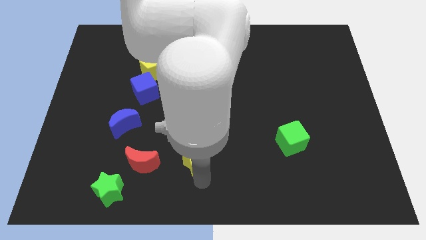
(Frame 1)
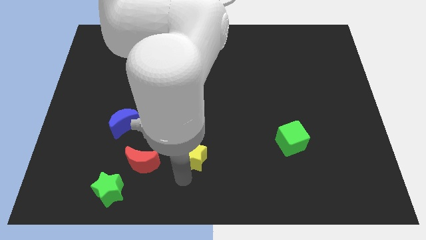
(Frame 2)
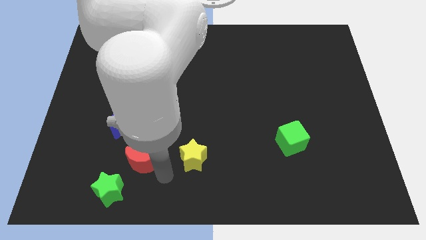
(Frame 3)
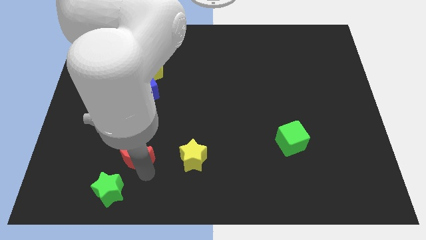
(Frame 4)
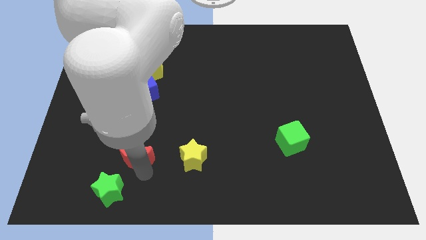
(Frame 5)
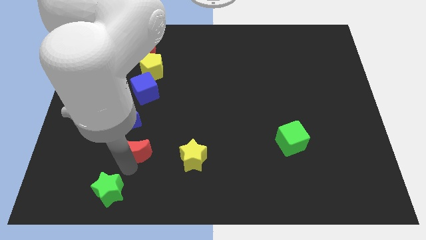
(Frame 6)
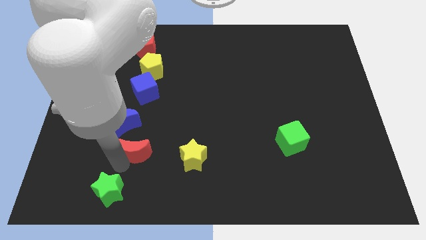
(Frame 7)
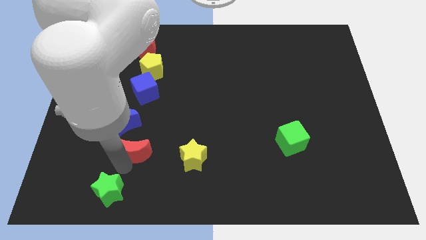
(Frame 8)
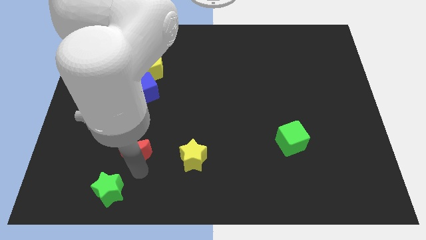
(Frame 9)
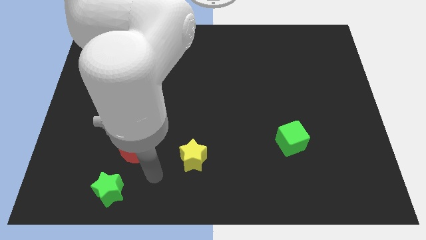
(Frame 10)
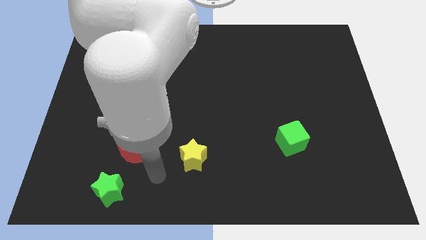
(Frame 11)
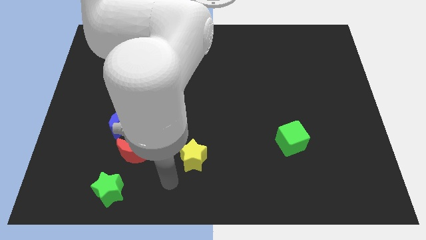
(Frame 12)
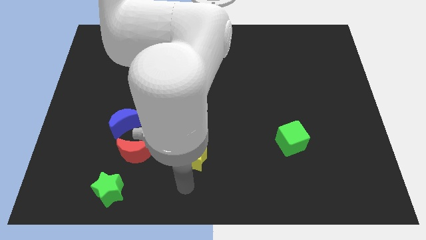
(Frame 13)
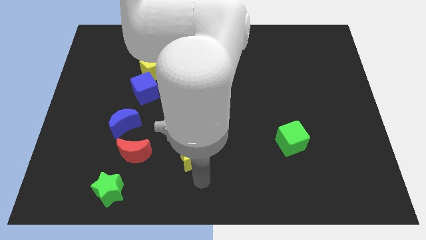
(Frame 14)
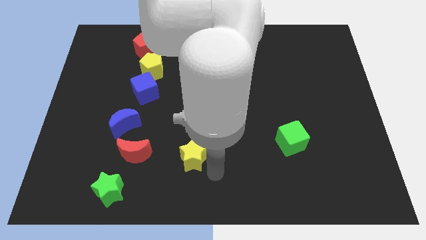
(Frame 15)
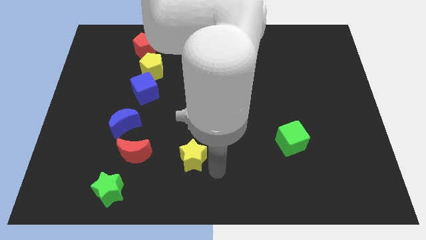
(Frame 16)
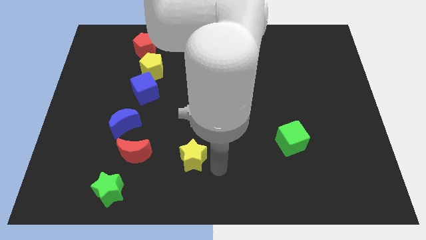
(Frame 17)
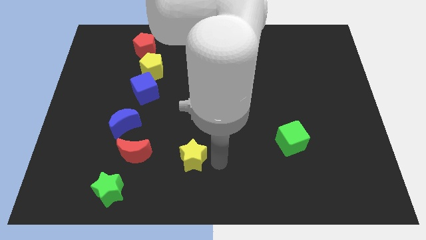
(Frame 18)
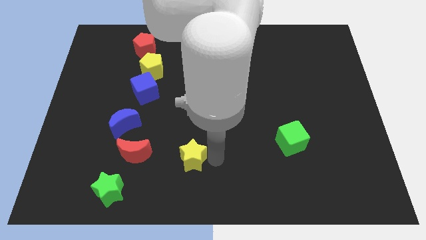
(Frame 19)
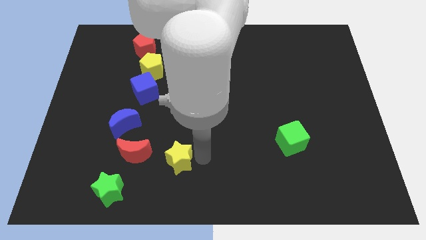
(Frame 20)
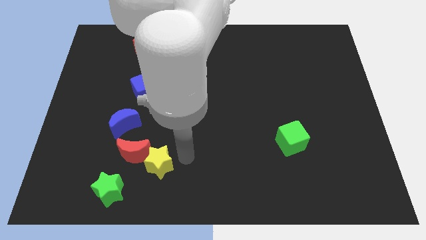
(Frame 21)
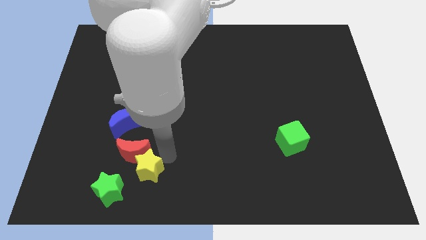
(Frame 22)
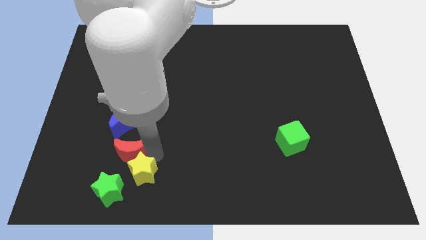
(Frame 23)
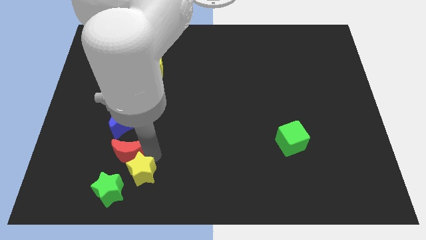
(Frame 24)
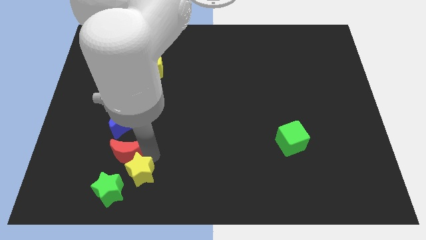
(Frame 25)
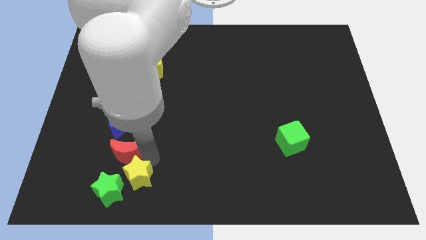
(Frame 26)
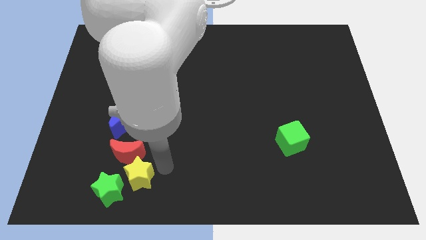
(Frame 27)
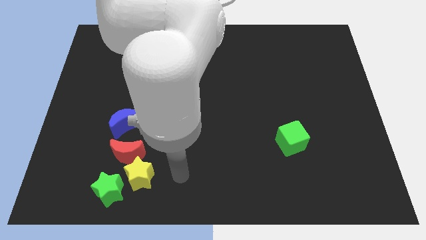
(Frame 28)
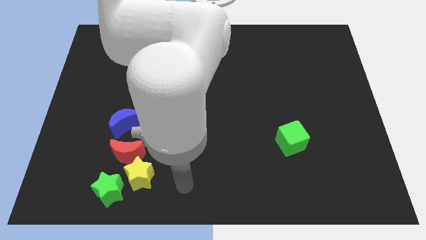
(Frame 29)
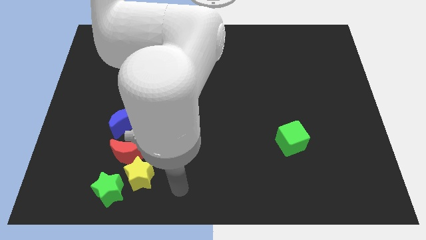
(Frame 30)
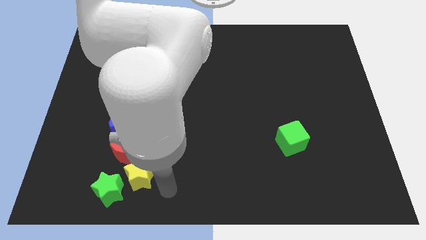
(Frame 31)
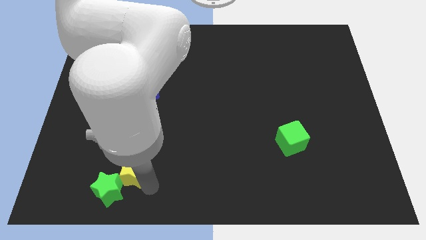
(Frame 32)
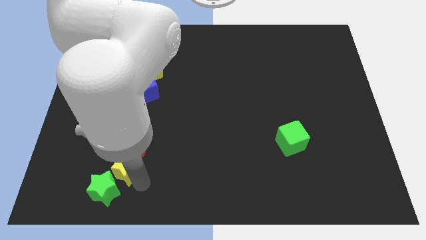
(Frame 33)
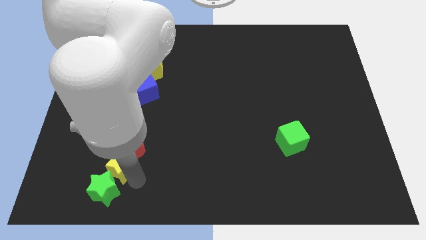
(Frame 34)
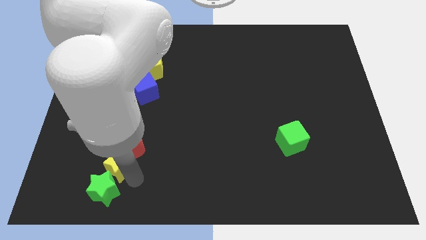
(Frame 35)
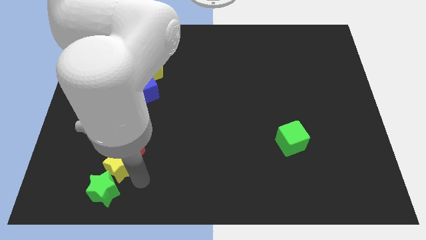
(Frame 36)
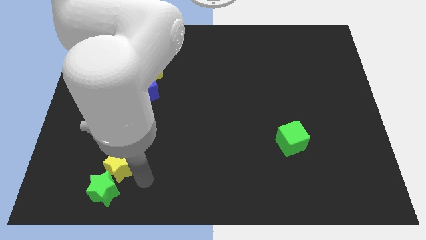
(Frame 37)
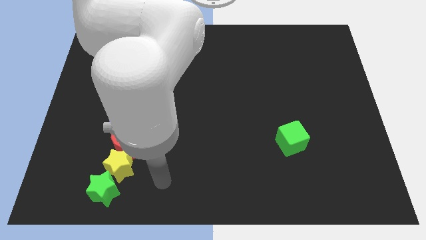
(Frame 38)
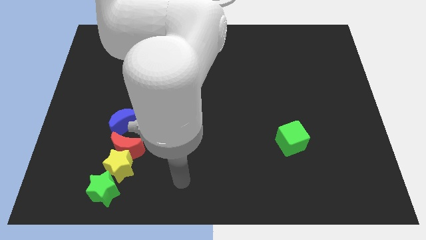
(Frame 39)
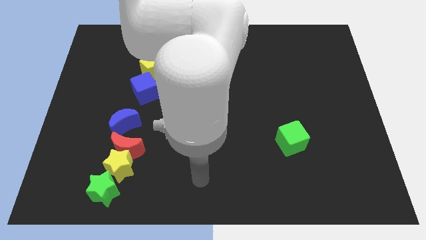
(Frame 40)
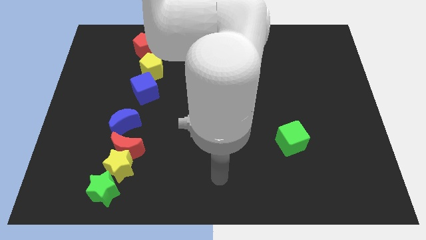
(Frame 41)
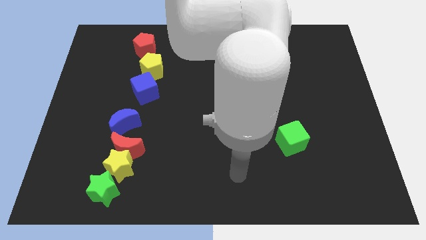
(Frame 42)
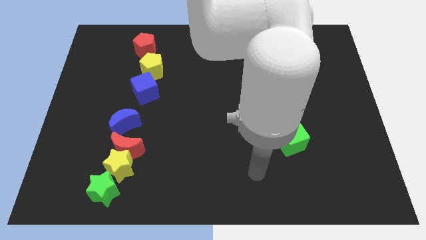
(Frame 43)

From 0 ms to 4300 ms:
place the yellow star vertically in between the red moon and the green star

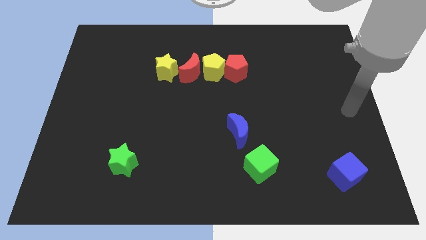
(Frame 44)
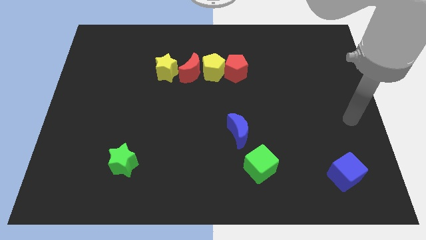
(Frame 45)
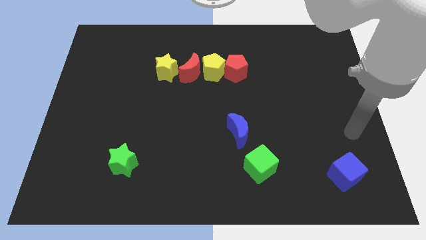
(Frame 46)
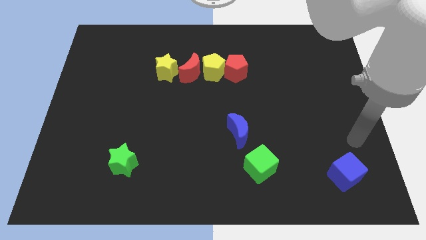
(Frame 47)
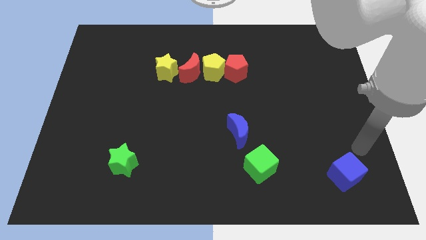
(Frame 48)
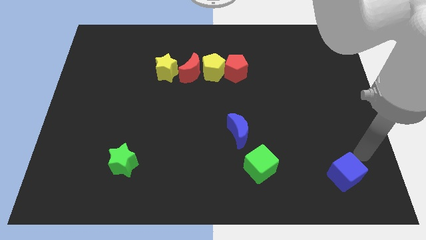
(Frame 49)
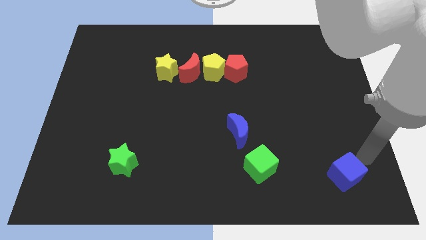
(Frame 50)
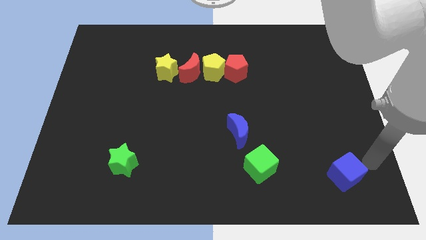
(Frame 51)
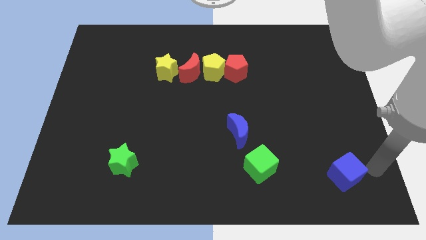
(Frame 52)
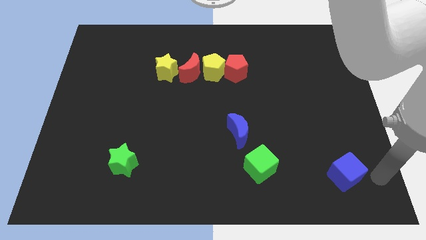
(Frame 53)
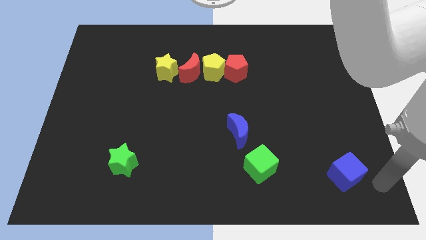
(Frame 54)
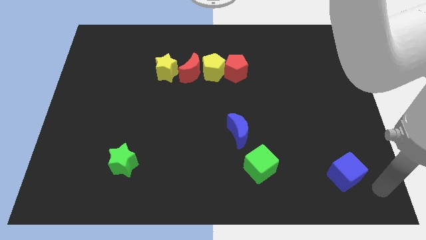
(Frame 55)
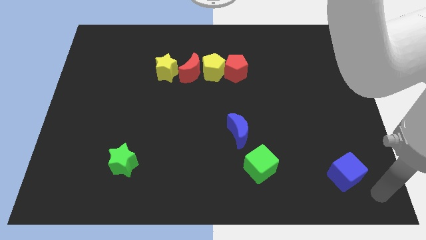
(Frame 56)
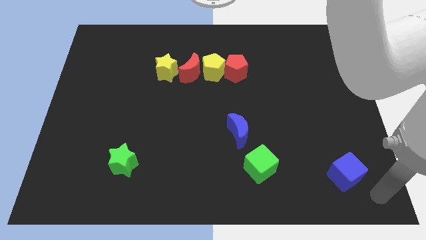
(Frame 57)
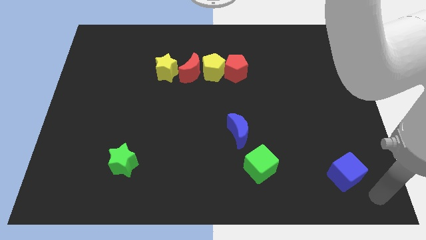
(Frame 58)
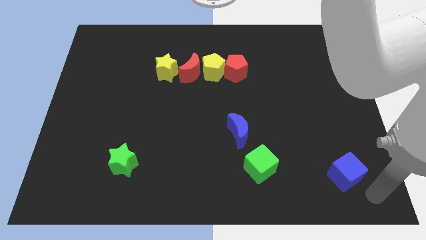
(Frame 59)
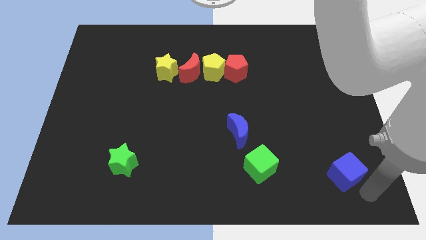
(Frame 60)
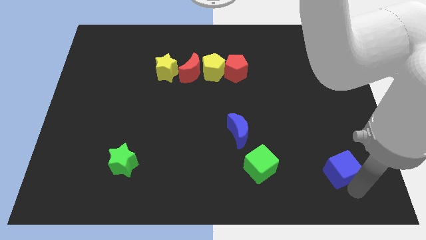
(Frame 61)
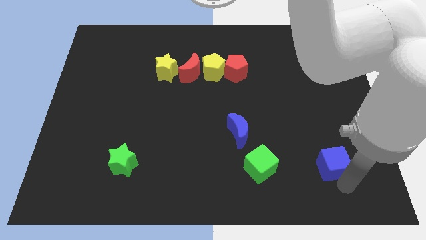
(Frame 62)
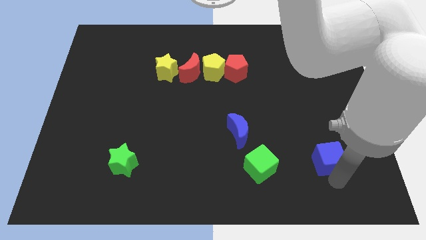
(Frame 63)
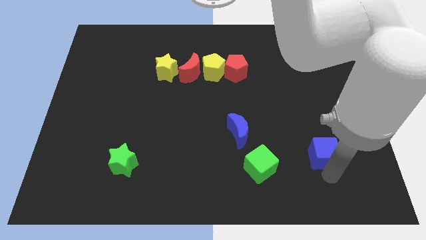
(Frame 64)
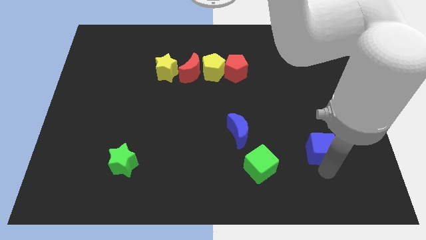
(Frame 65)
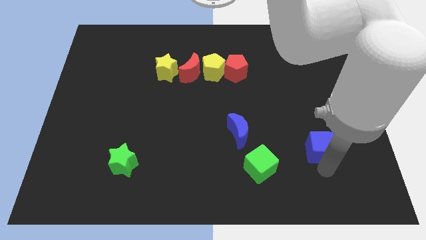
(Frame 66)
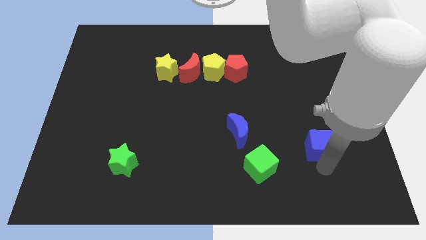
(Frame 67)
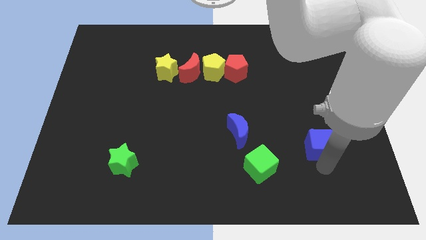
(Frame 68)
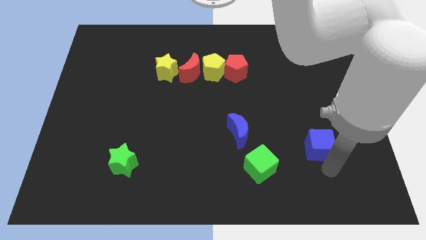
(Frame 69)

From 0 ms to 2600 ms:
push the blue cube upward

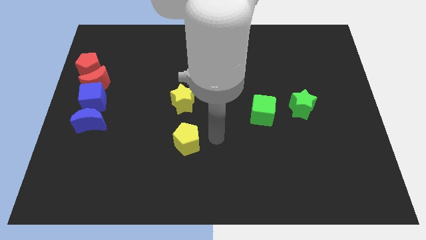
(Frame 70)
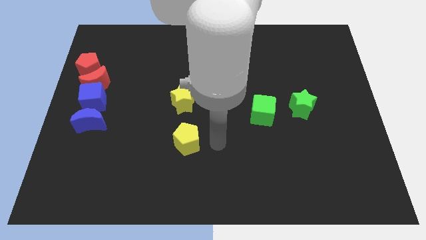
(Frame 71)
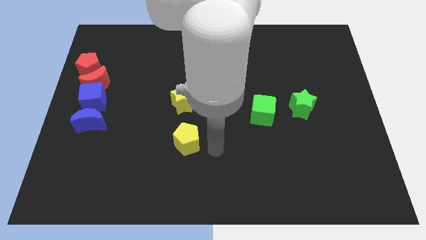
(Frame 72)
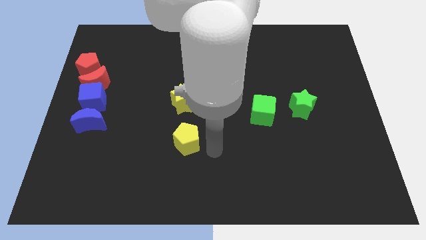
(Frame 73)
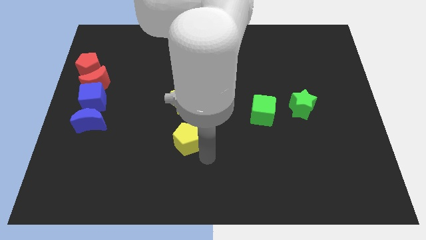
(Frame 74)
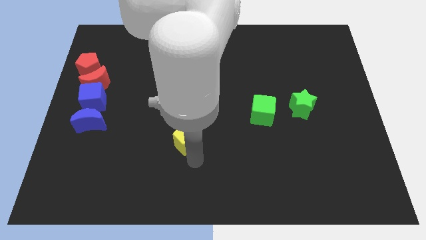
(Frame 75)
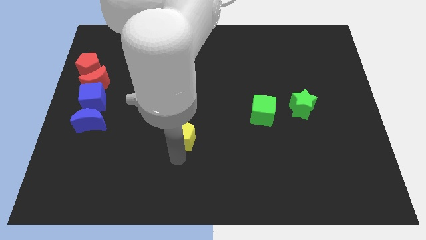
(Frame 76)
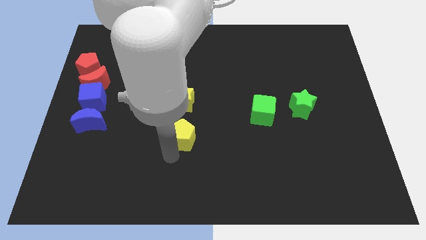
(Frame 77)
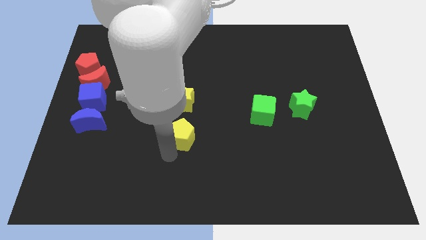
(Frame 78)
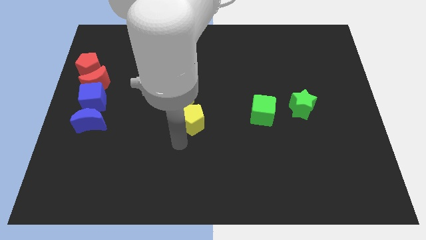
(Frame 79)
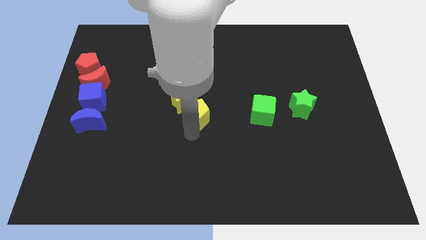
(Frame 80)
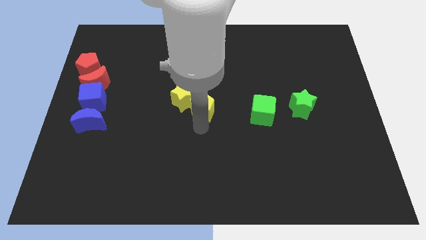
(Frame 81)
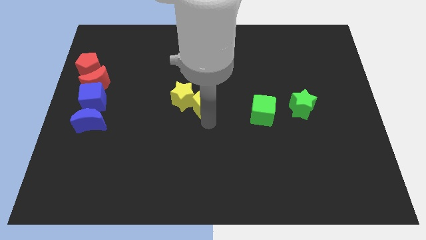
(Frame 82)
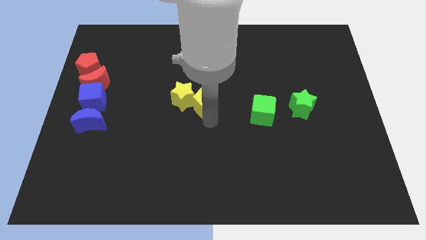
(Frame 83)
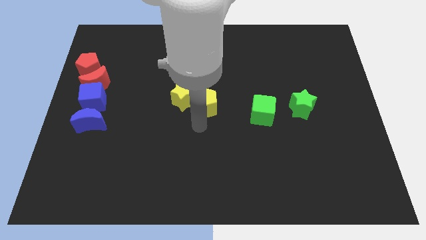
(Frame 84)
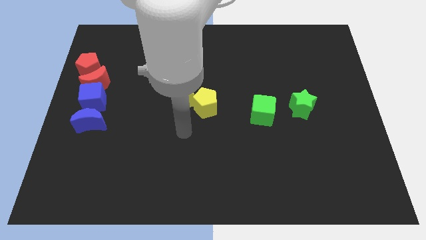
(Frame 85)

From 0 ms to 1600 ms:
push the yellow pentagon into green star

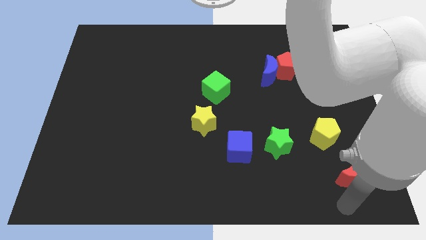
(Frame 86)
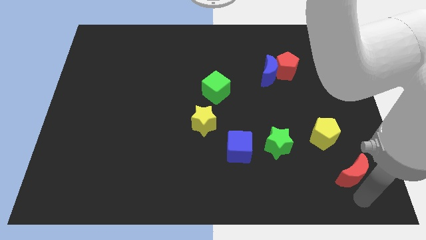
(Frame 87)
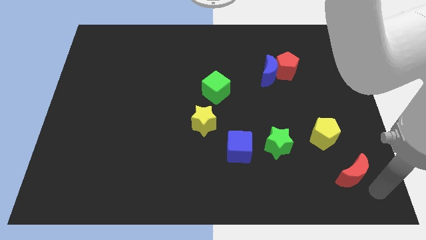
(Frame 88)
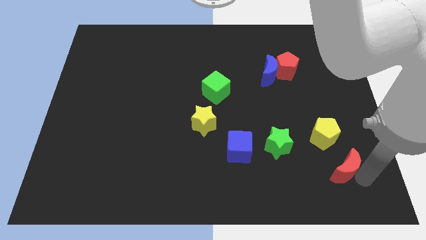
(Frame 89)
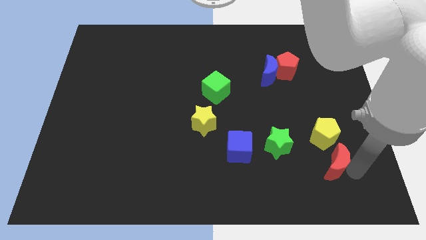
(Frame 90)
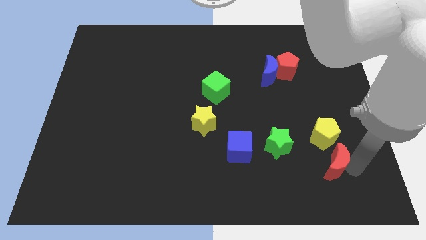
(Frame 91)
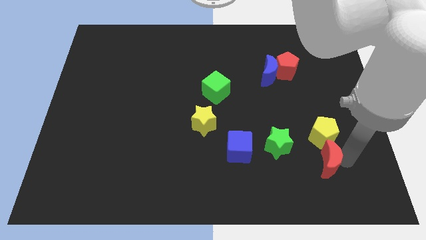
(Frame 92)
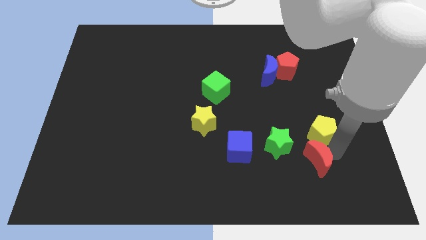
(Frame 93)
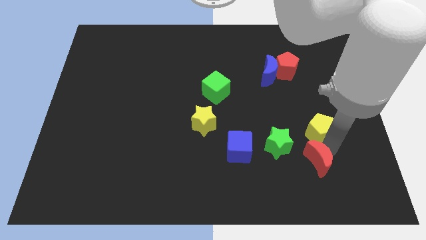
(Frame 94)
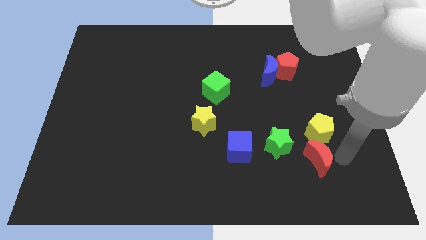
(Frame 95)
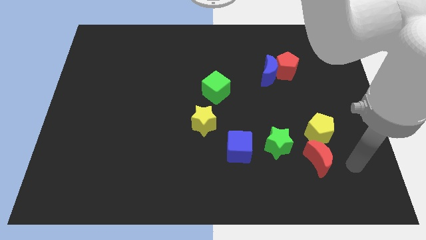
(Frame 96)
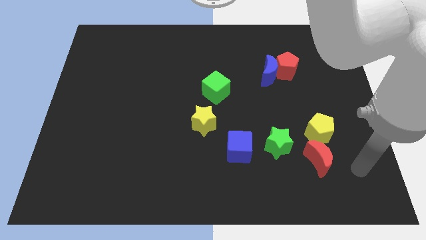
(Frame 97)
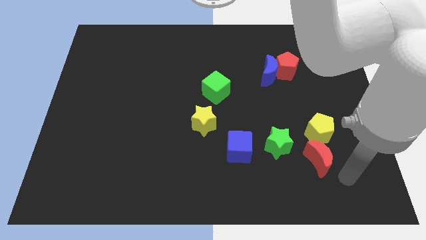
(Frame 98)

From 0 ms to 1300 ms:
push the red moon below the yellow pentagon
